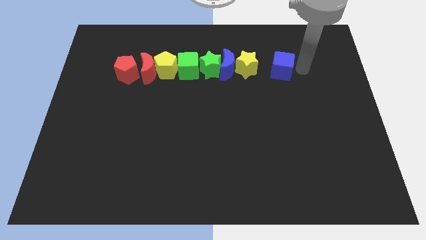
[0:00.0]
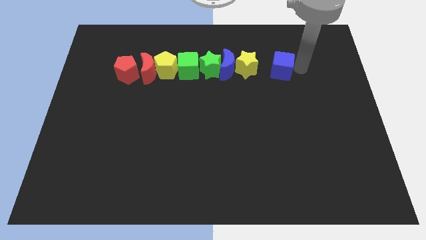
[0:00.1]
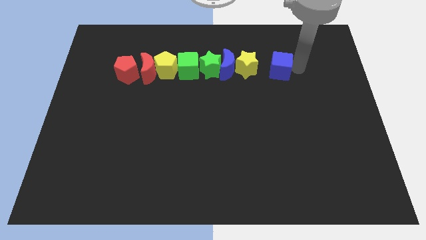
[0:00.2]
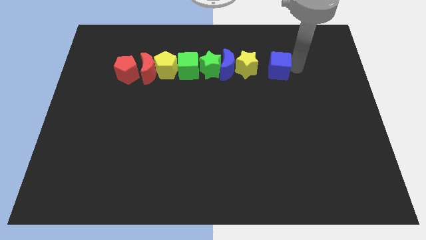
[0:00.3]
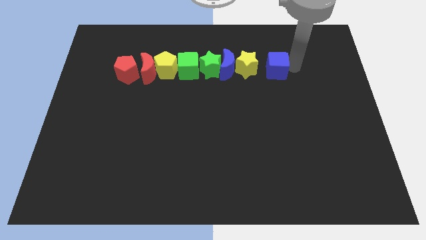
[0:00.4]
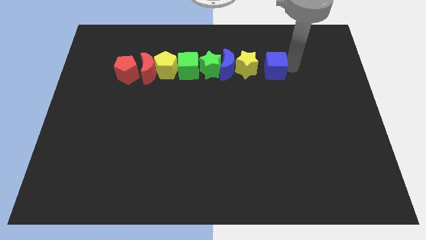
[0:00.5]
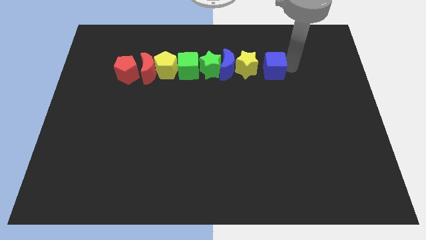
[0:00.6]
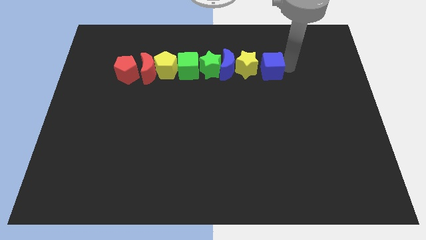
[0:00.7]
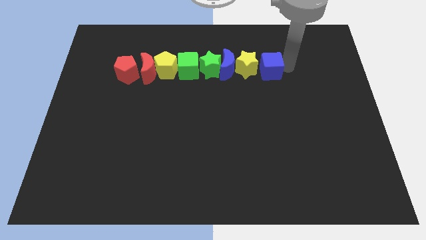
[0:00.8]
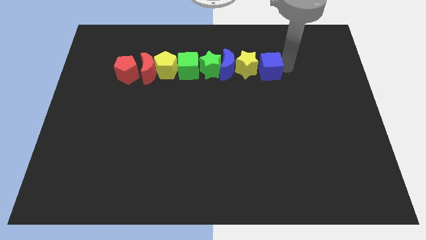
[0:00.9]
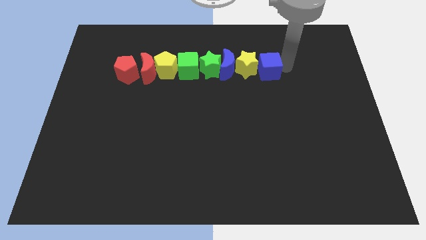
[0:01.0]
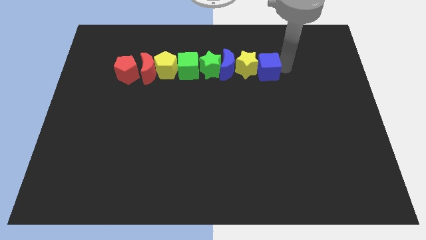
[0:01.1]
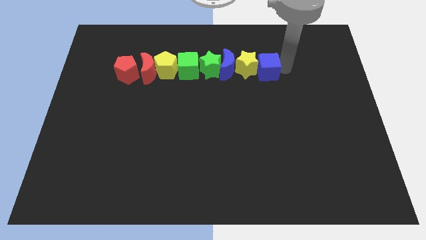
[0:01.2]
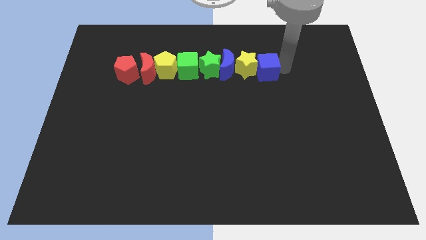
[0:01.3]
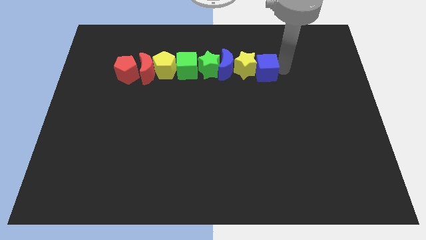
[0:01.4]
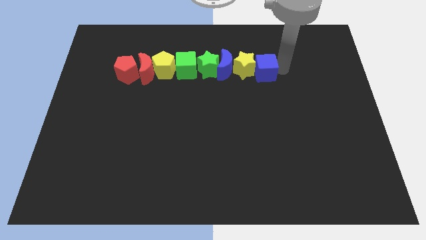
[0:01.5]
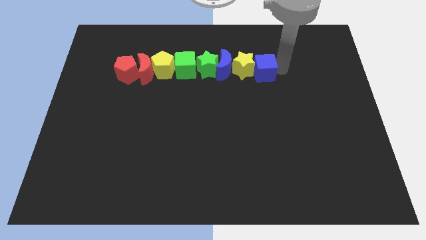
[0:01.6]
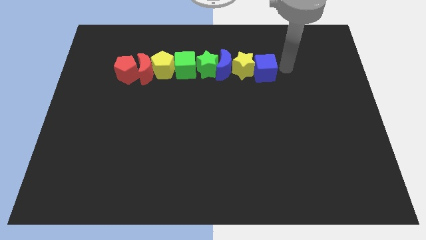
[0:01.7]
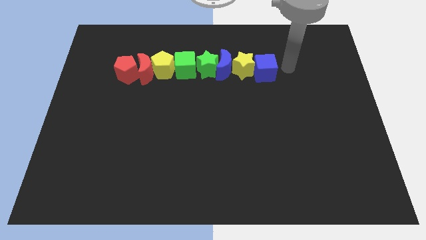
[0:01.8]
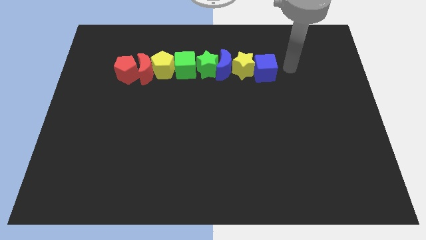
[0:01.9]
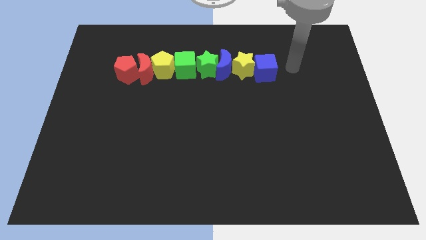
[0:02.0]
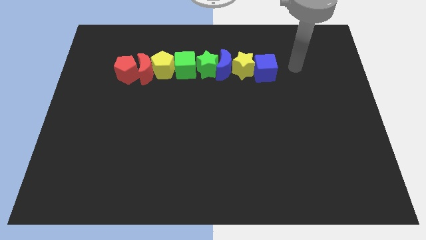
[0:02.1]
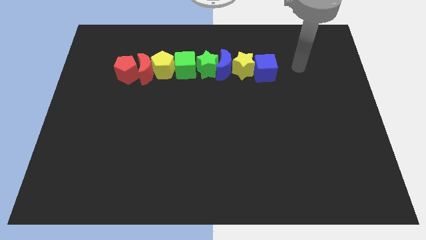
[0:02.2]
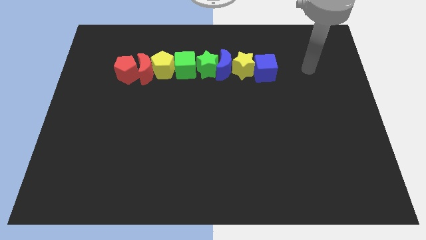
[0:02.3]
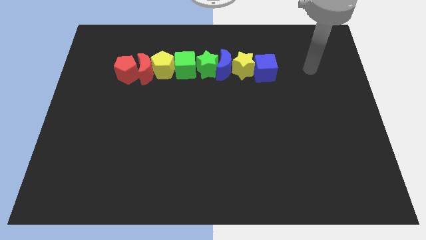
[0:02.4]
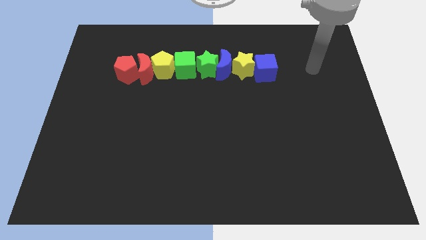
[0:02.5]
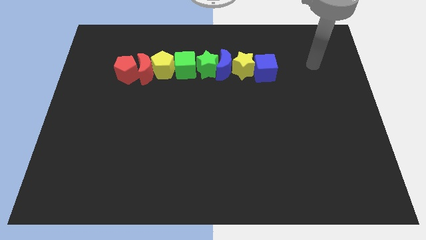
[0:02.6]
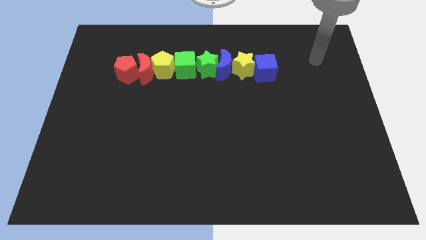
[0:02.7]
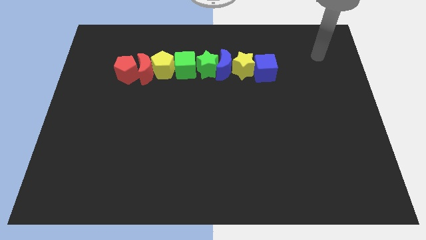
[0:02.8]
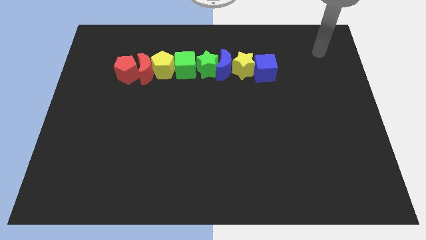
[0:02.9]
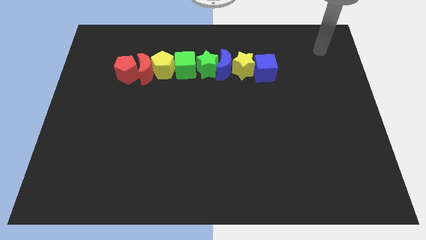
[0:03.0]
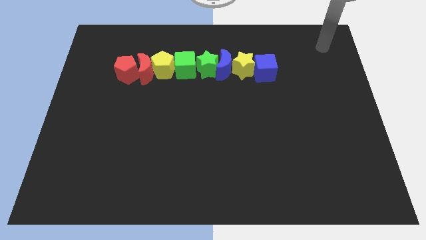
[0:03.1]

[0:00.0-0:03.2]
slide the blue cube into the yellow star

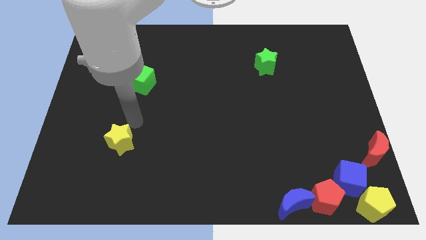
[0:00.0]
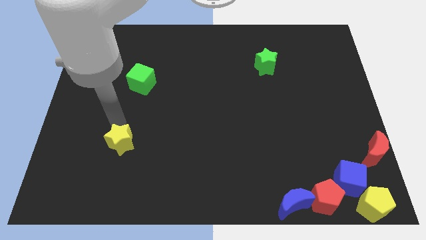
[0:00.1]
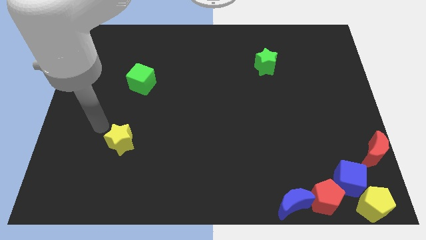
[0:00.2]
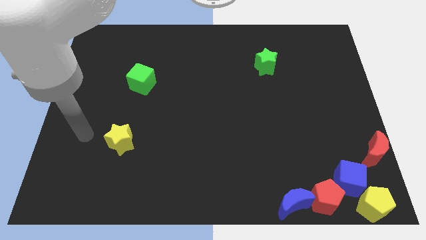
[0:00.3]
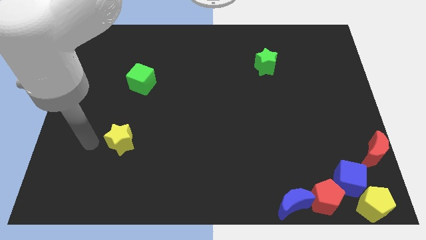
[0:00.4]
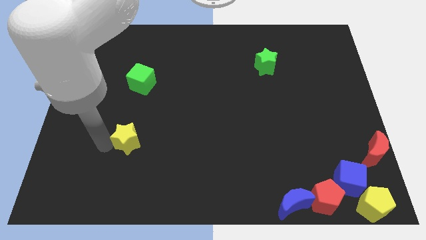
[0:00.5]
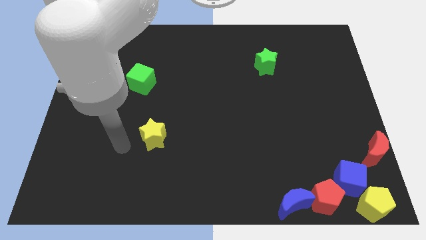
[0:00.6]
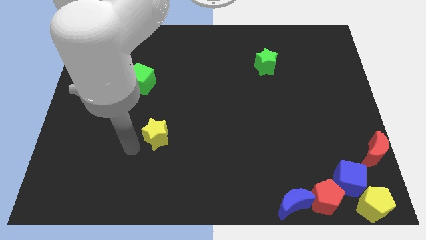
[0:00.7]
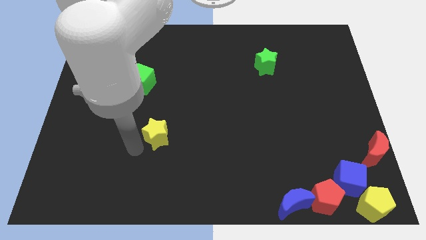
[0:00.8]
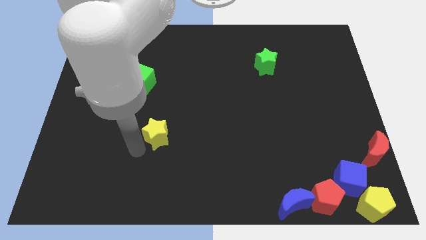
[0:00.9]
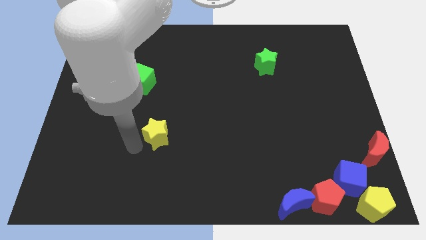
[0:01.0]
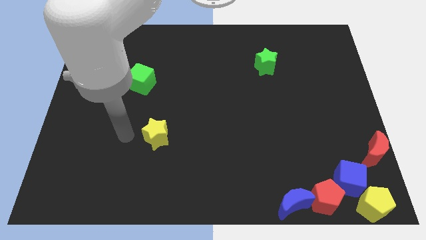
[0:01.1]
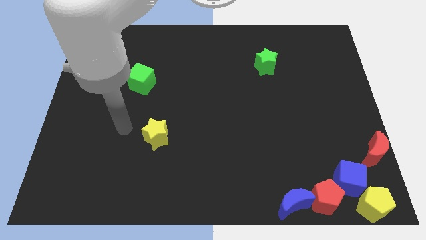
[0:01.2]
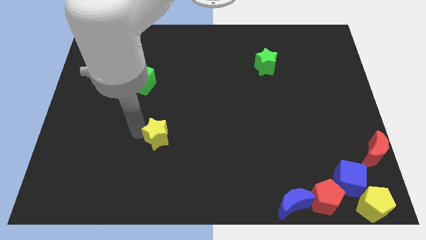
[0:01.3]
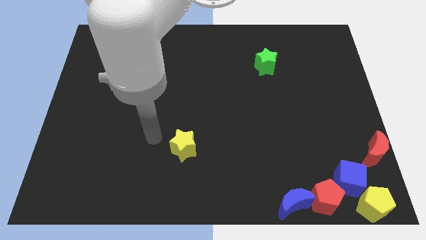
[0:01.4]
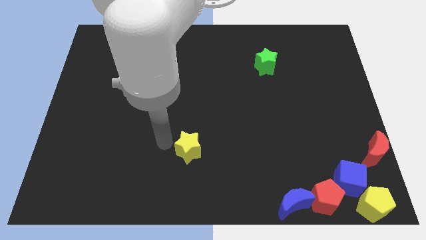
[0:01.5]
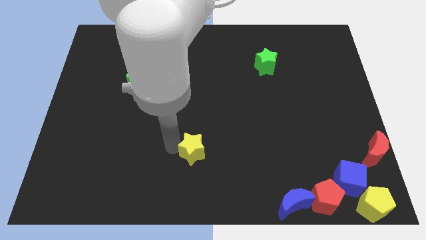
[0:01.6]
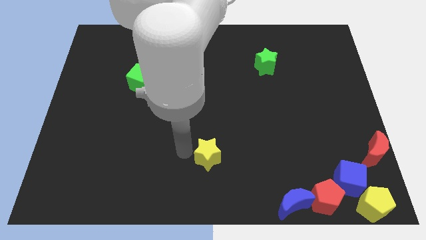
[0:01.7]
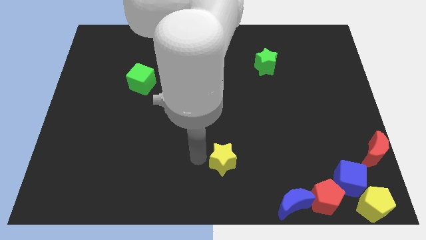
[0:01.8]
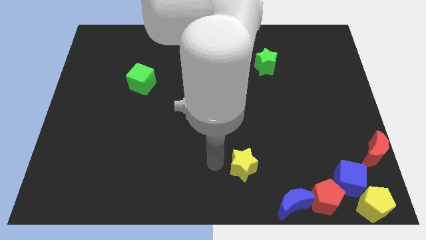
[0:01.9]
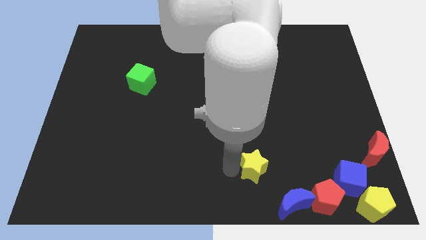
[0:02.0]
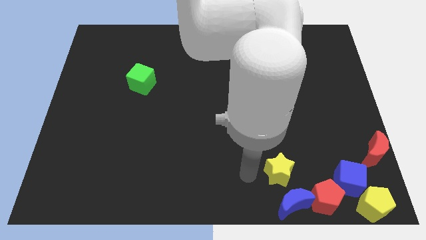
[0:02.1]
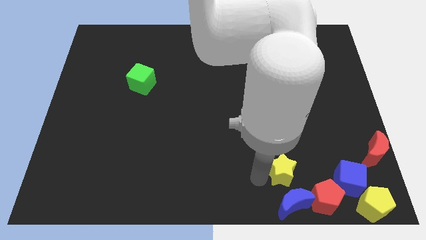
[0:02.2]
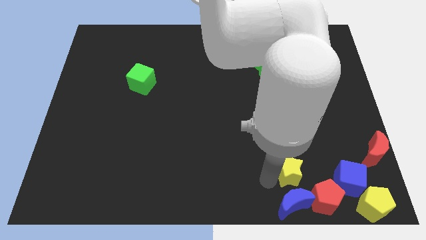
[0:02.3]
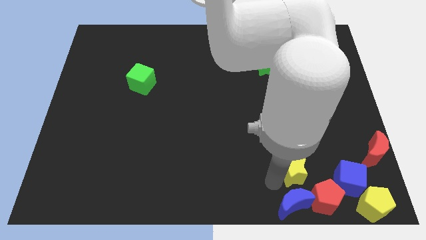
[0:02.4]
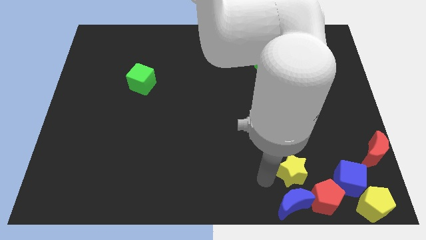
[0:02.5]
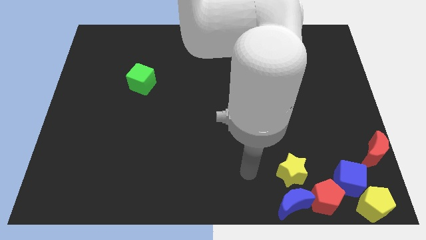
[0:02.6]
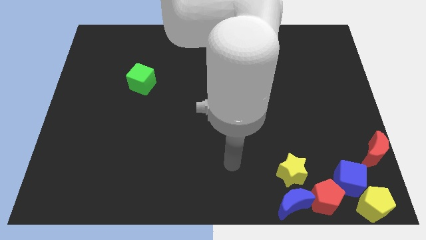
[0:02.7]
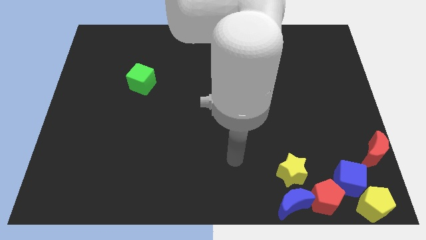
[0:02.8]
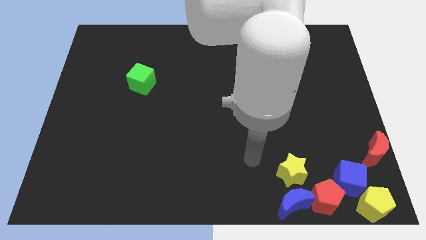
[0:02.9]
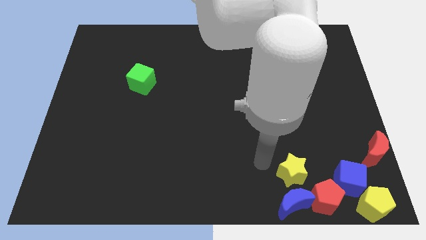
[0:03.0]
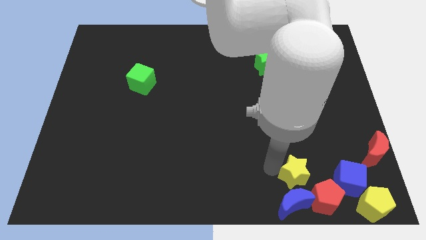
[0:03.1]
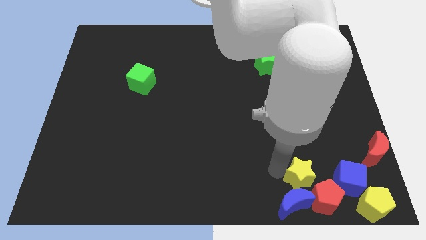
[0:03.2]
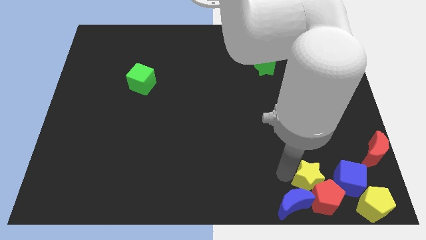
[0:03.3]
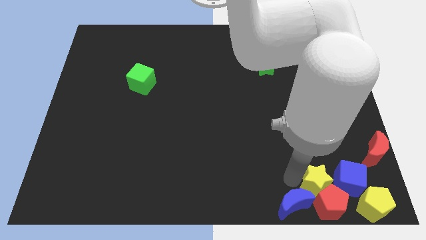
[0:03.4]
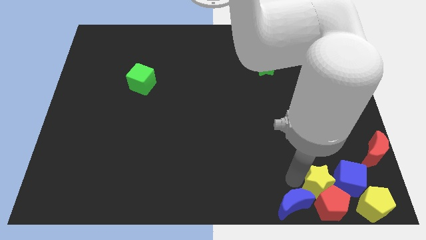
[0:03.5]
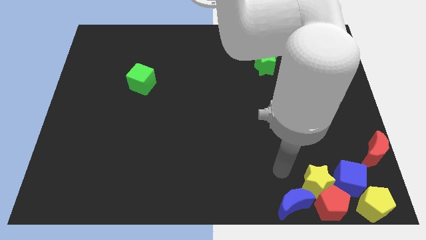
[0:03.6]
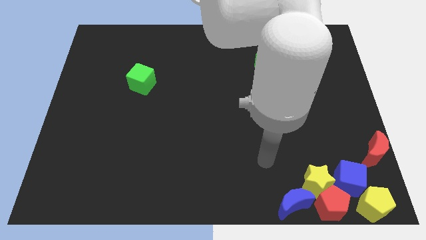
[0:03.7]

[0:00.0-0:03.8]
take the yellow star into the red pentagon

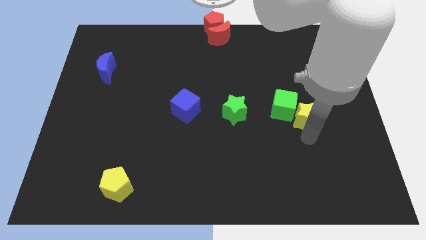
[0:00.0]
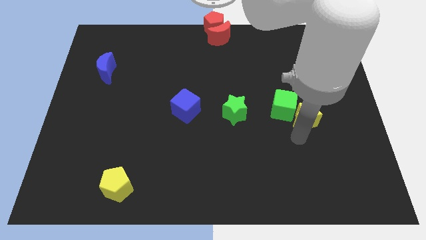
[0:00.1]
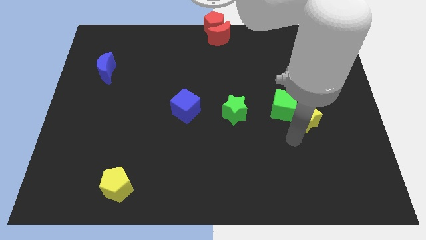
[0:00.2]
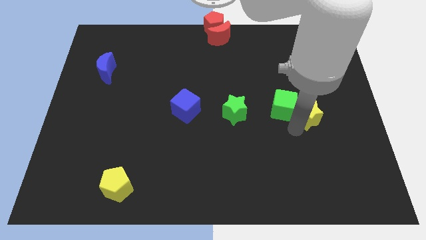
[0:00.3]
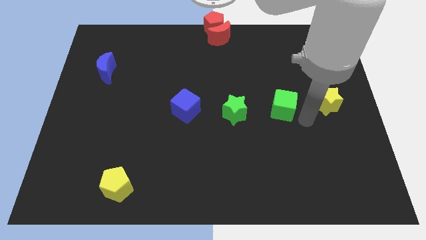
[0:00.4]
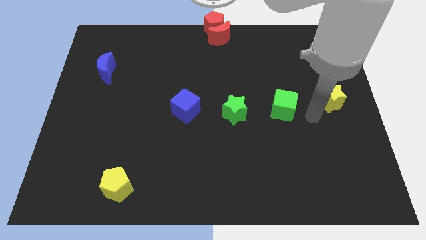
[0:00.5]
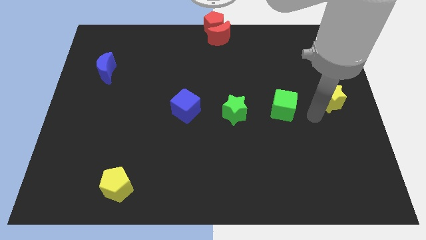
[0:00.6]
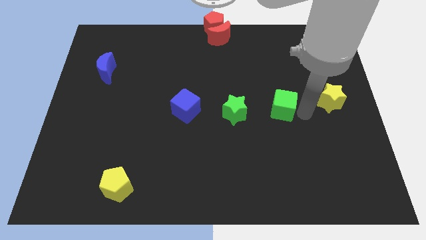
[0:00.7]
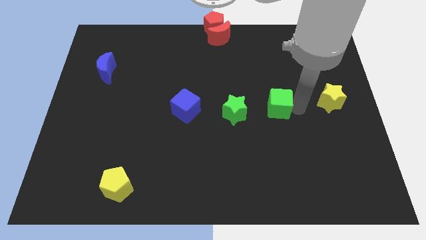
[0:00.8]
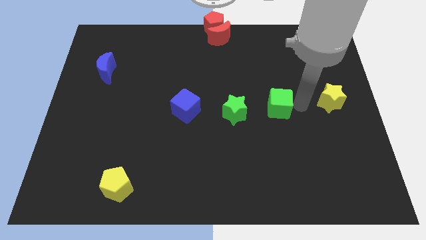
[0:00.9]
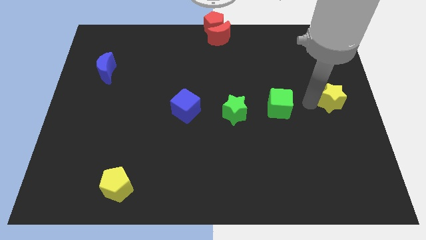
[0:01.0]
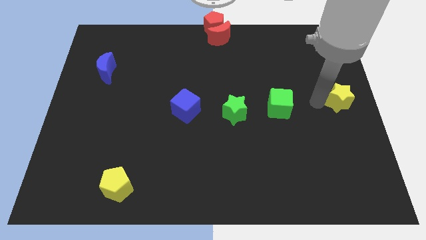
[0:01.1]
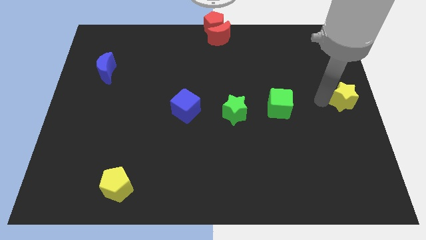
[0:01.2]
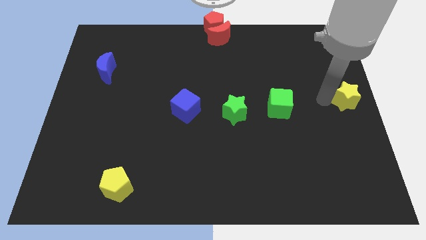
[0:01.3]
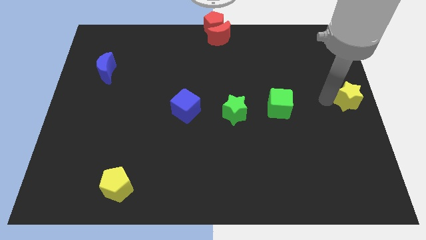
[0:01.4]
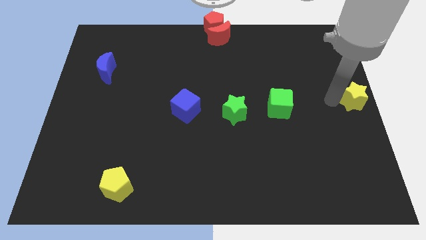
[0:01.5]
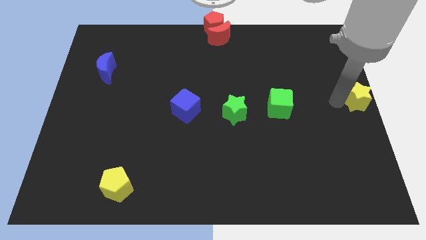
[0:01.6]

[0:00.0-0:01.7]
separate the yellow star away from the green cube
